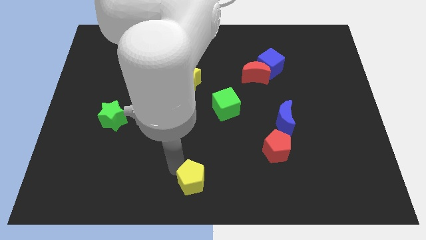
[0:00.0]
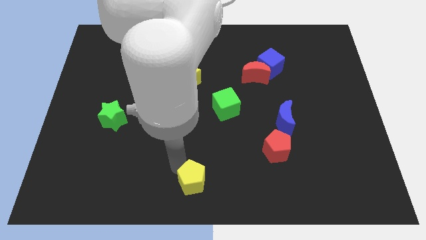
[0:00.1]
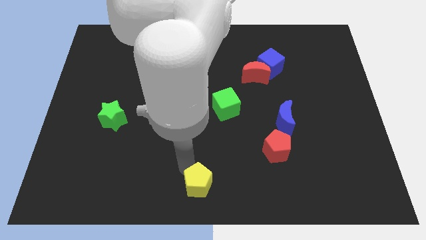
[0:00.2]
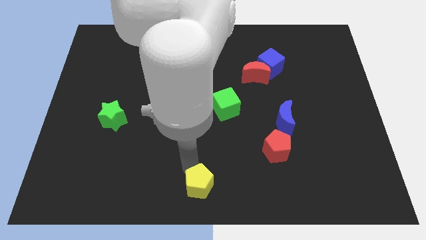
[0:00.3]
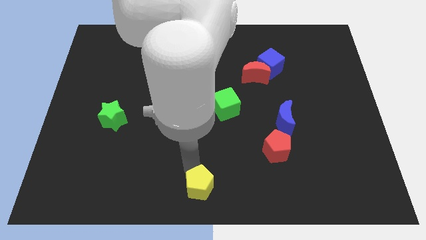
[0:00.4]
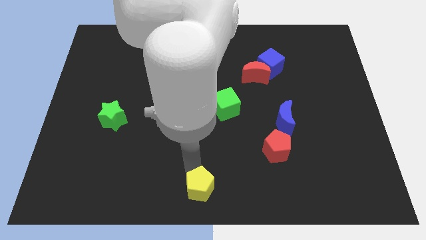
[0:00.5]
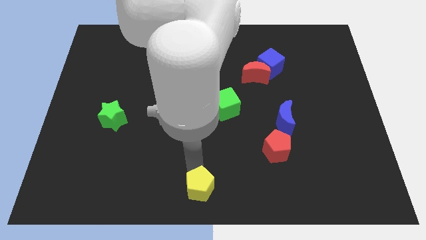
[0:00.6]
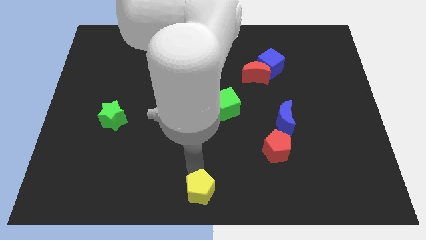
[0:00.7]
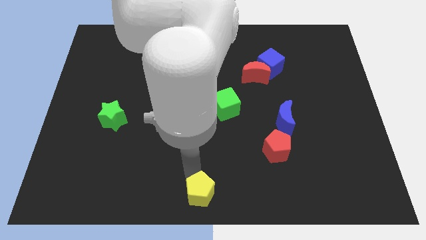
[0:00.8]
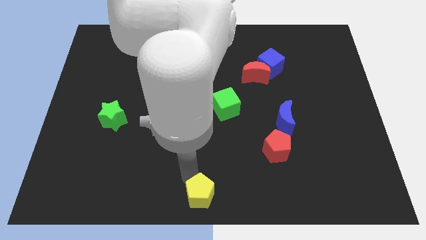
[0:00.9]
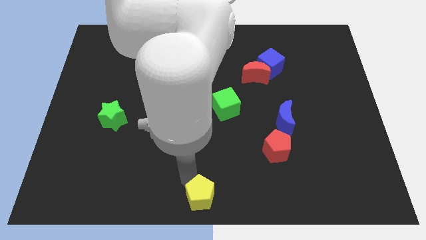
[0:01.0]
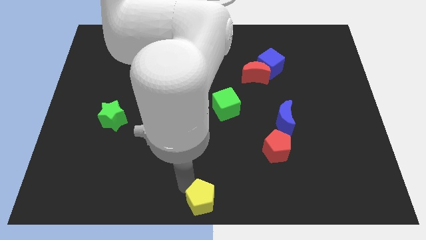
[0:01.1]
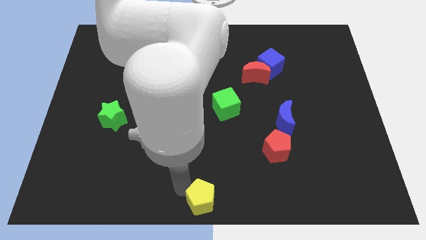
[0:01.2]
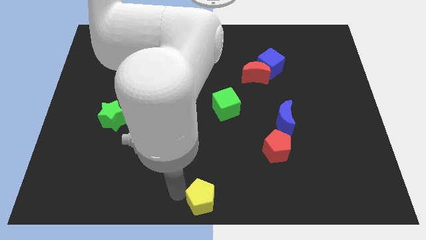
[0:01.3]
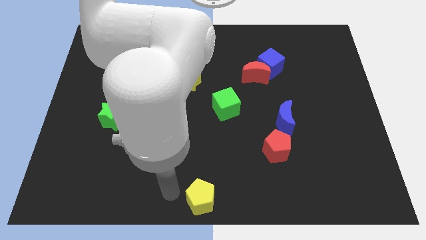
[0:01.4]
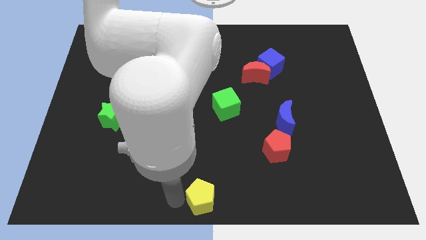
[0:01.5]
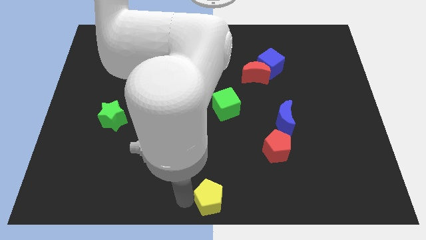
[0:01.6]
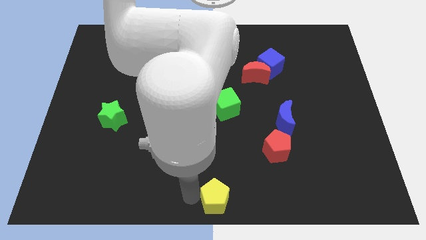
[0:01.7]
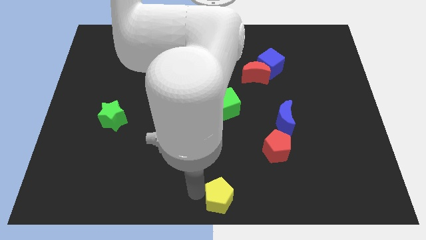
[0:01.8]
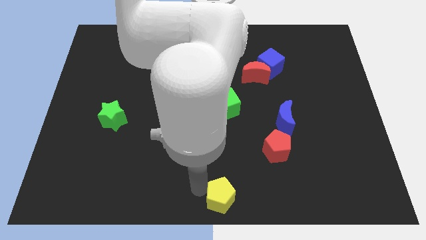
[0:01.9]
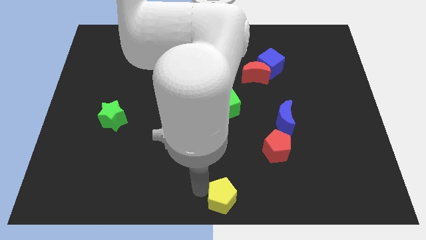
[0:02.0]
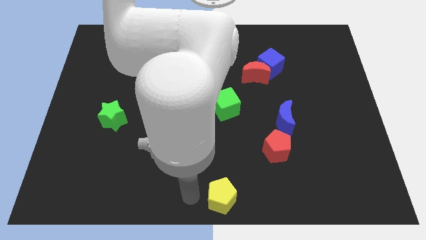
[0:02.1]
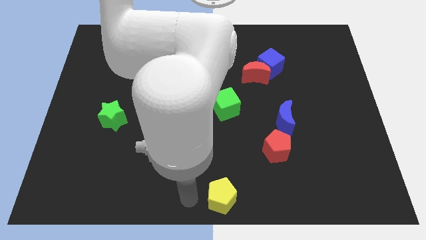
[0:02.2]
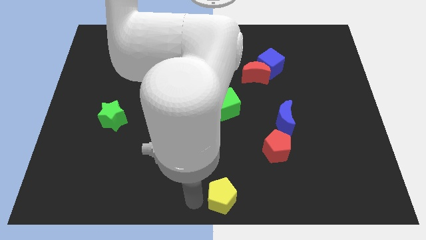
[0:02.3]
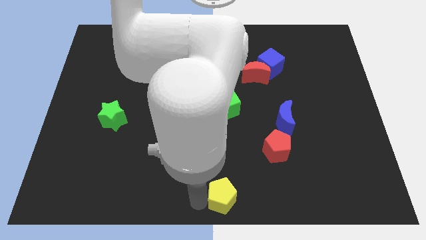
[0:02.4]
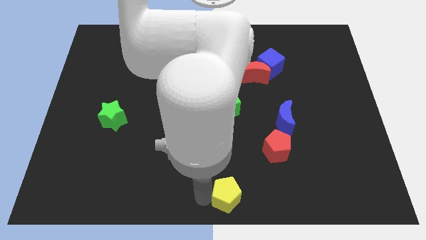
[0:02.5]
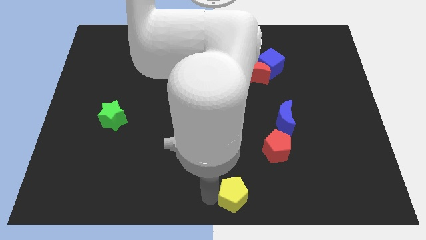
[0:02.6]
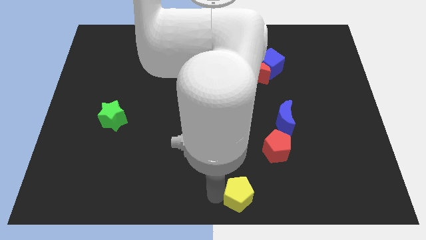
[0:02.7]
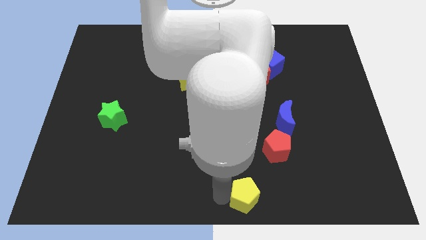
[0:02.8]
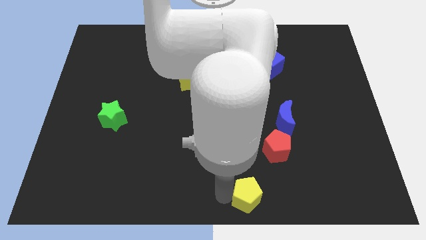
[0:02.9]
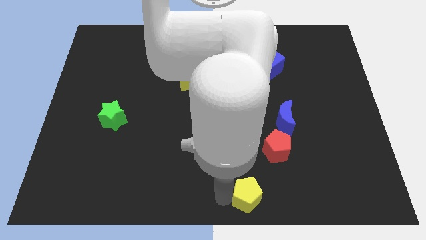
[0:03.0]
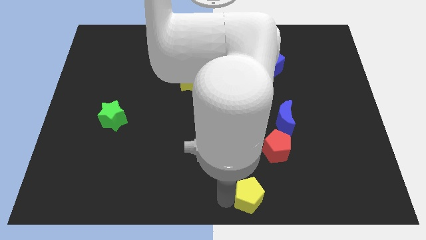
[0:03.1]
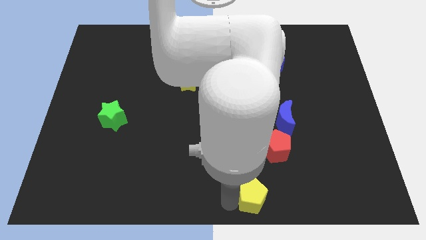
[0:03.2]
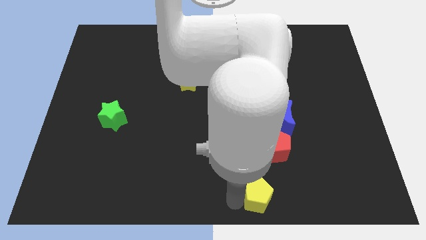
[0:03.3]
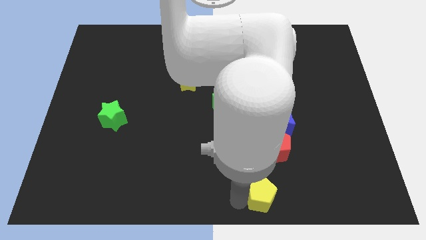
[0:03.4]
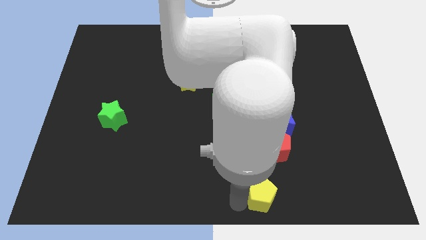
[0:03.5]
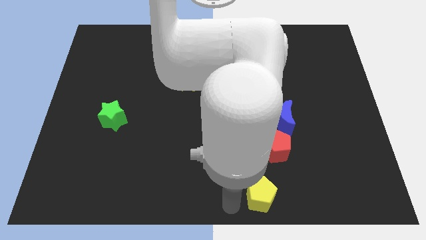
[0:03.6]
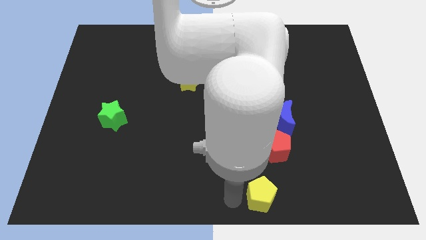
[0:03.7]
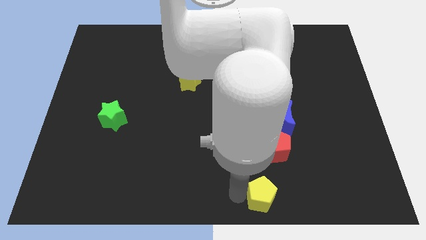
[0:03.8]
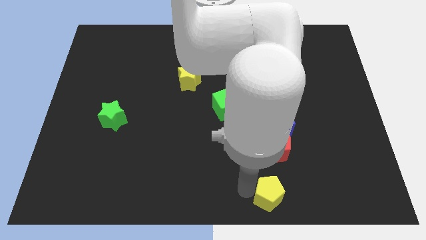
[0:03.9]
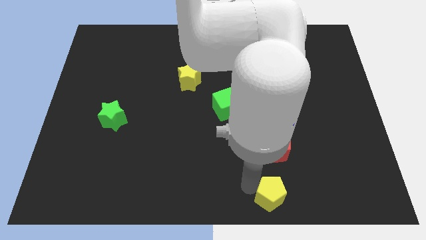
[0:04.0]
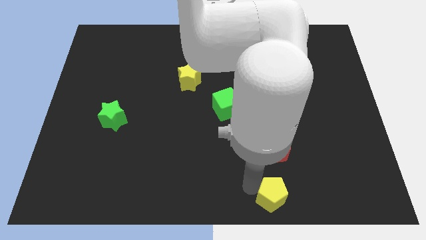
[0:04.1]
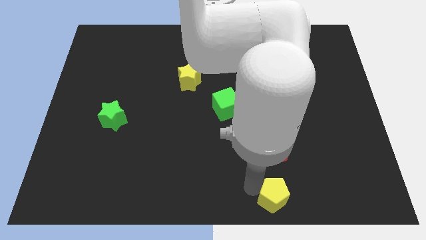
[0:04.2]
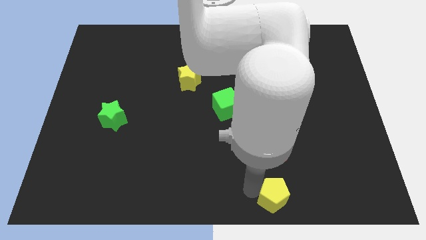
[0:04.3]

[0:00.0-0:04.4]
push the yellow pentagon to the bottom of the red pentagon

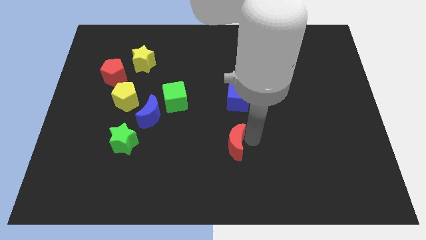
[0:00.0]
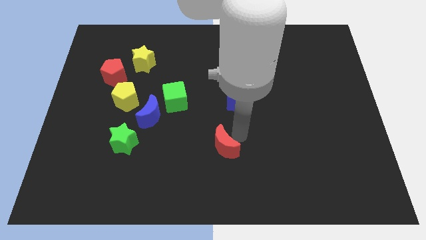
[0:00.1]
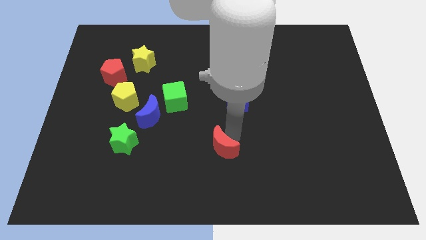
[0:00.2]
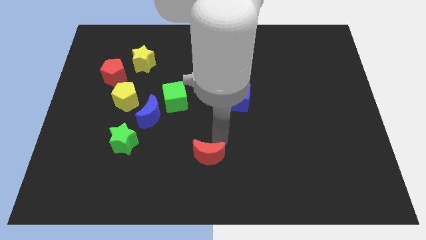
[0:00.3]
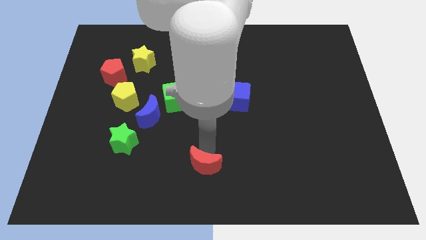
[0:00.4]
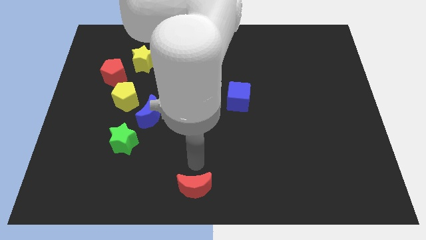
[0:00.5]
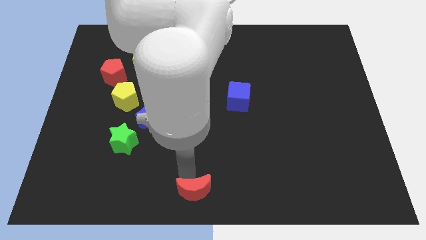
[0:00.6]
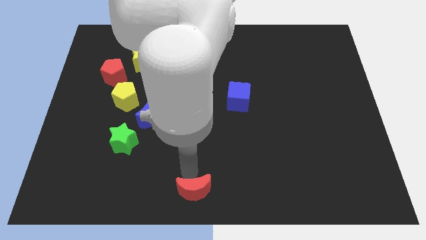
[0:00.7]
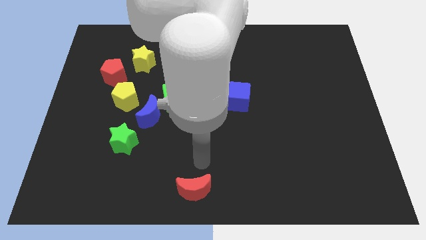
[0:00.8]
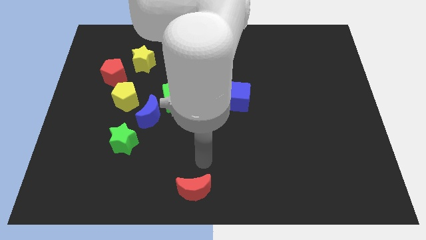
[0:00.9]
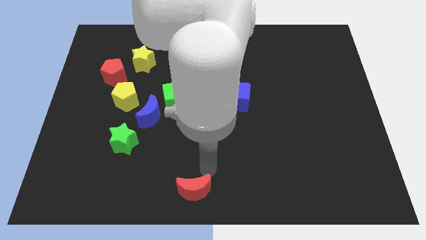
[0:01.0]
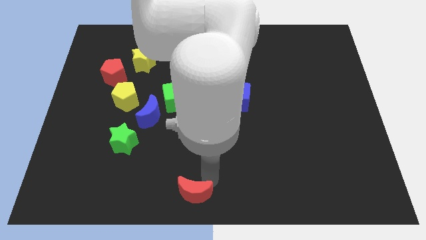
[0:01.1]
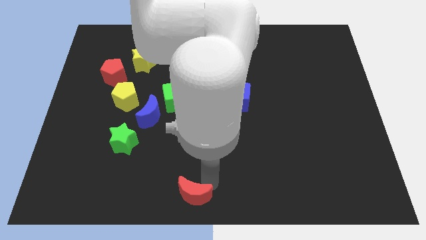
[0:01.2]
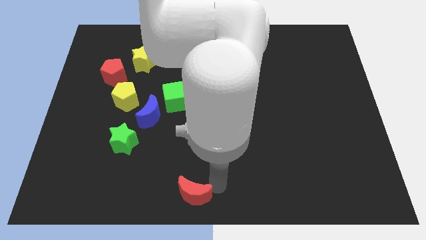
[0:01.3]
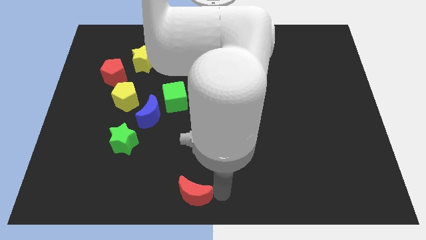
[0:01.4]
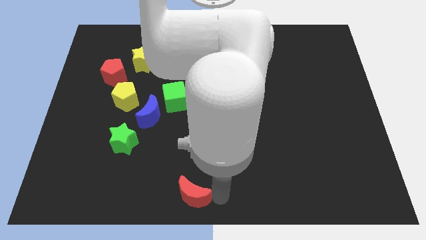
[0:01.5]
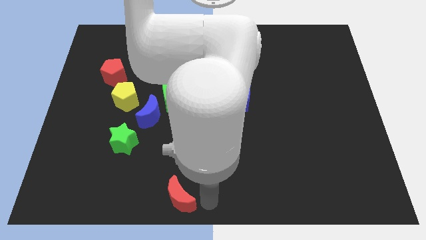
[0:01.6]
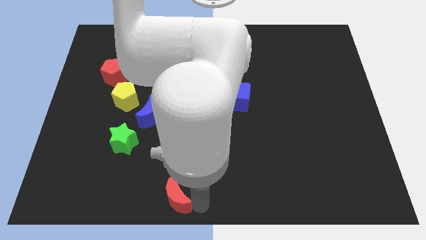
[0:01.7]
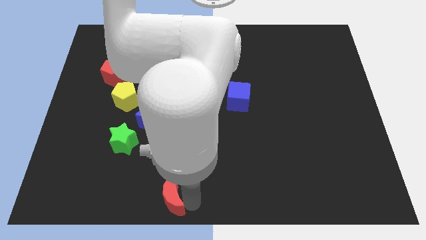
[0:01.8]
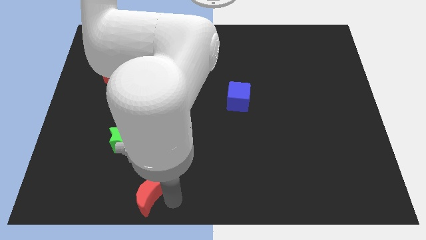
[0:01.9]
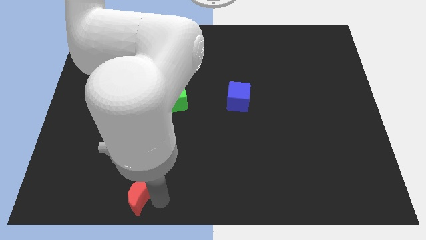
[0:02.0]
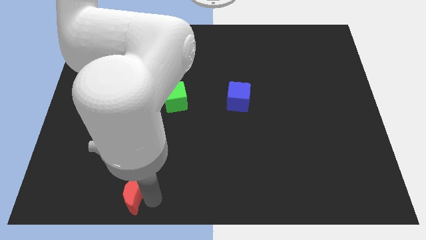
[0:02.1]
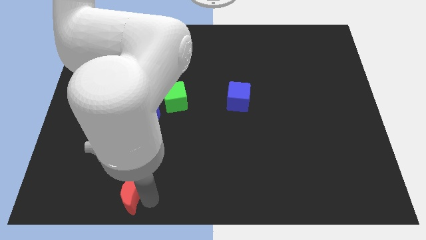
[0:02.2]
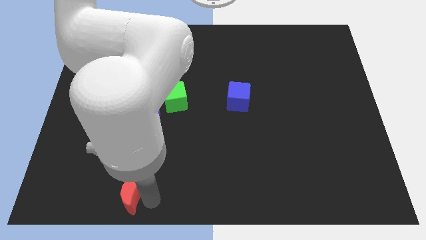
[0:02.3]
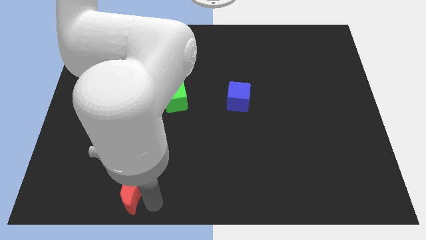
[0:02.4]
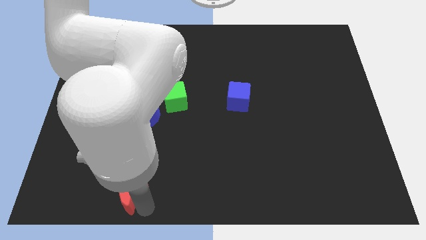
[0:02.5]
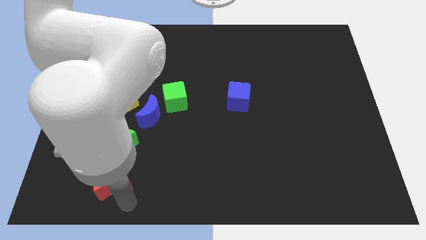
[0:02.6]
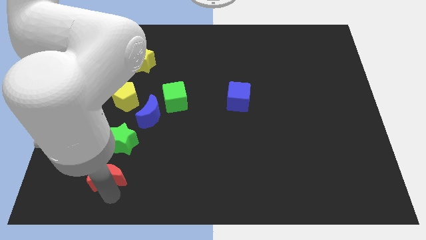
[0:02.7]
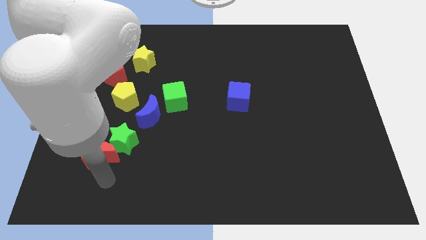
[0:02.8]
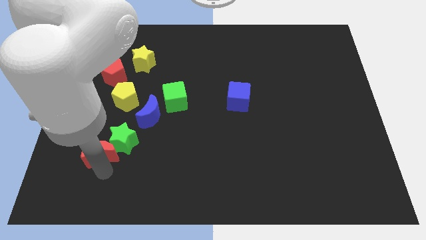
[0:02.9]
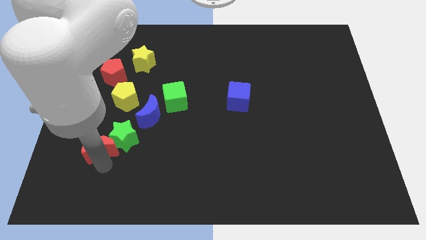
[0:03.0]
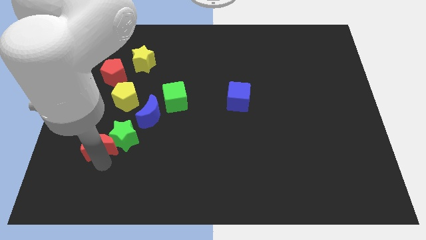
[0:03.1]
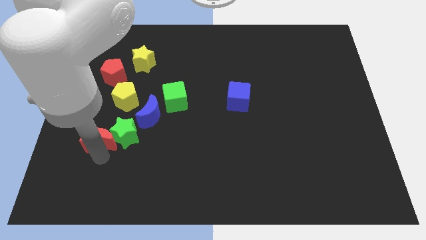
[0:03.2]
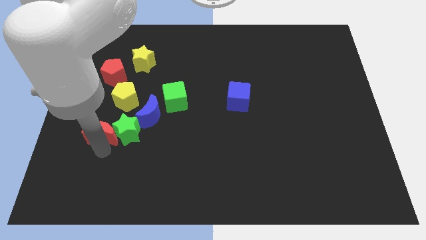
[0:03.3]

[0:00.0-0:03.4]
move red crescent close to the green star

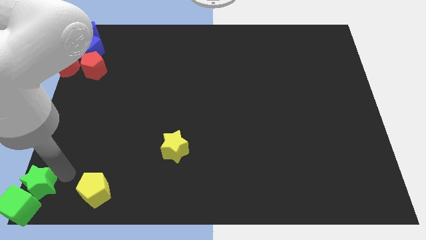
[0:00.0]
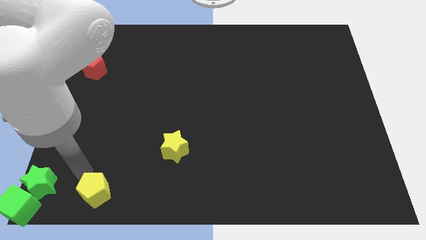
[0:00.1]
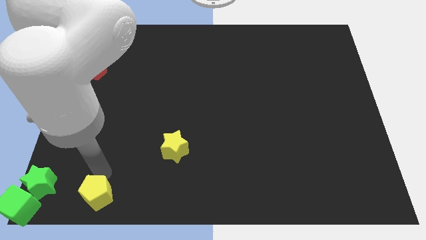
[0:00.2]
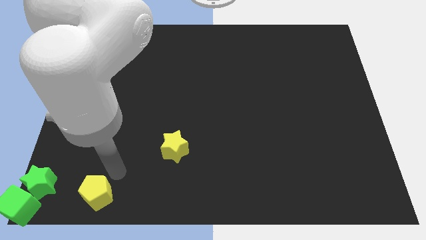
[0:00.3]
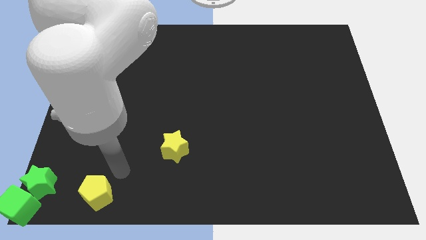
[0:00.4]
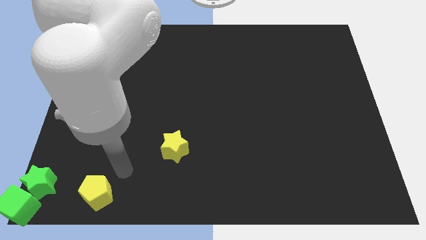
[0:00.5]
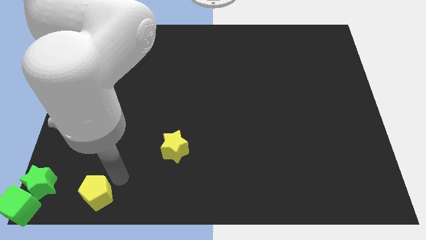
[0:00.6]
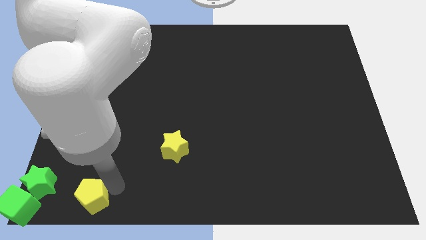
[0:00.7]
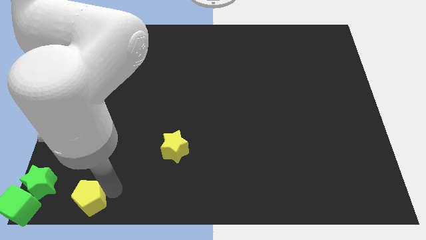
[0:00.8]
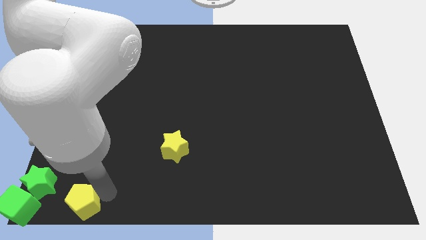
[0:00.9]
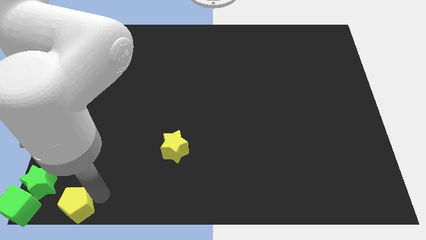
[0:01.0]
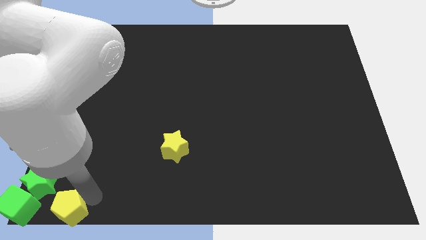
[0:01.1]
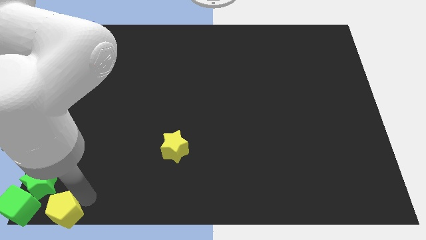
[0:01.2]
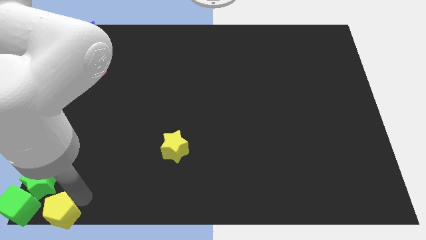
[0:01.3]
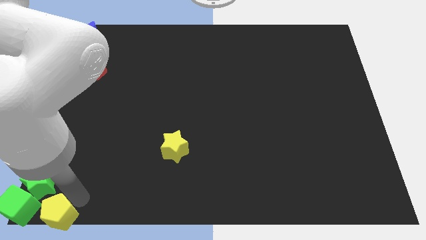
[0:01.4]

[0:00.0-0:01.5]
place the yellow pentagon to the right side of green cube
